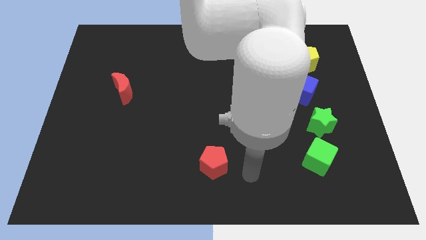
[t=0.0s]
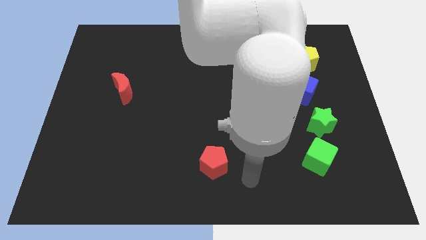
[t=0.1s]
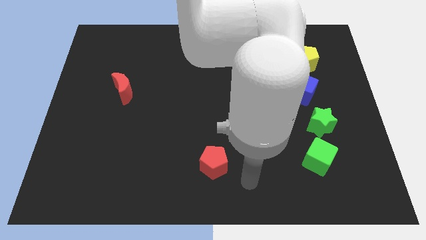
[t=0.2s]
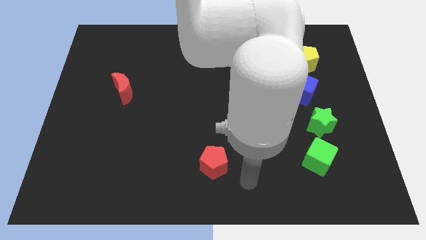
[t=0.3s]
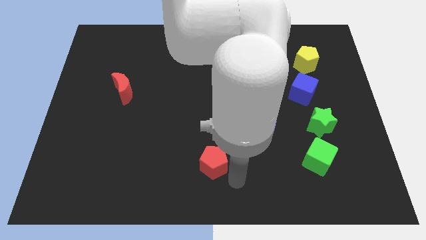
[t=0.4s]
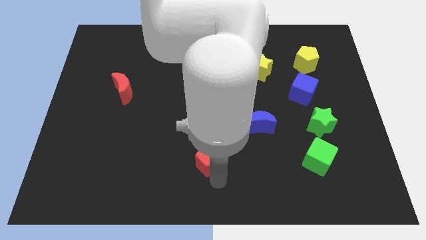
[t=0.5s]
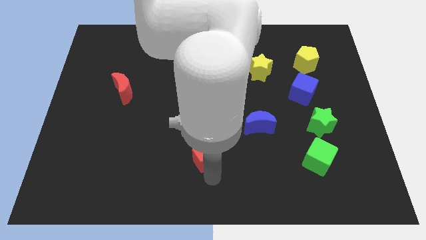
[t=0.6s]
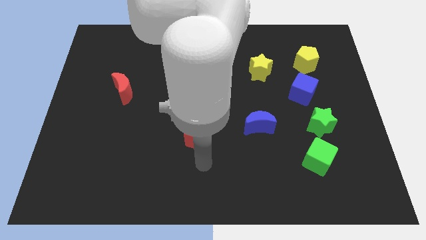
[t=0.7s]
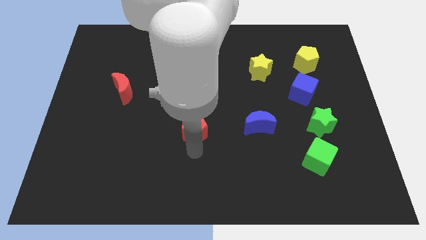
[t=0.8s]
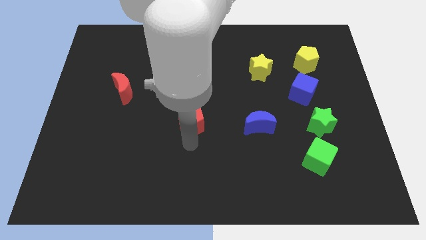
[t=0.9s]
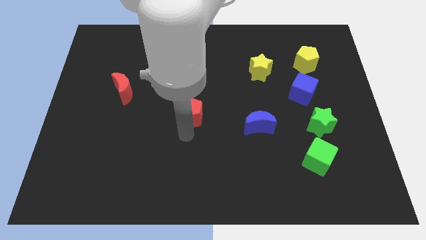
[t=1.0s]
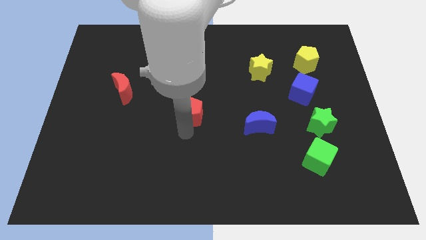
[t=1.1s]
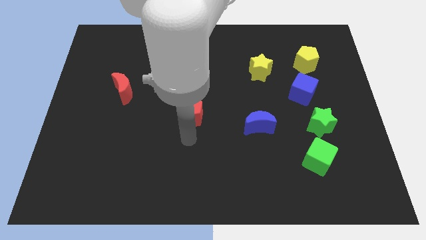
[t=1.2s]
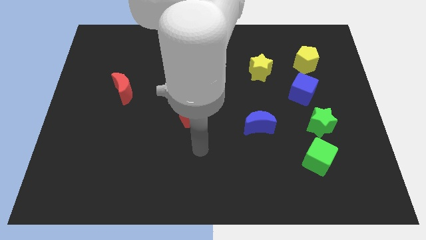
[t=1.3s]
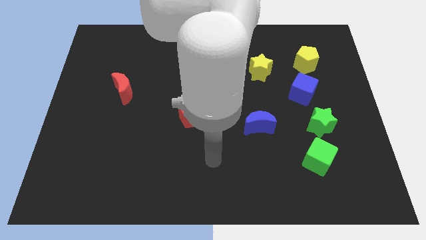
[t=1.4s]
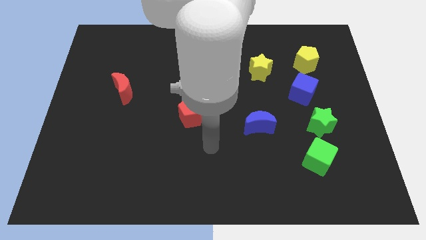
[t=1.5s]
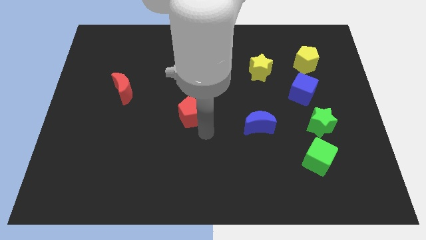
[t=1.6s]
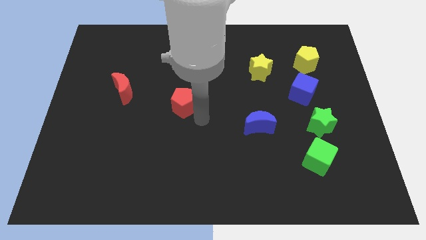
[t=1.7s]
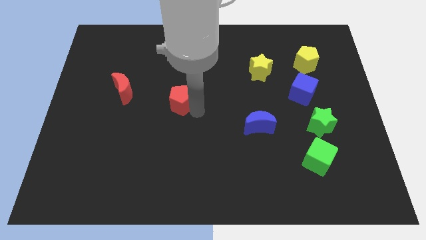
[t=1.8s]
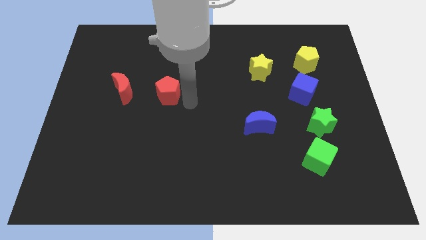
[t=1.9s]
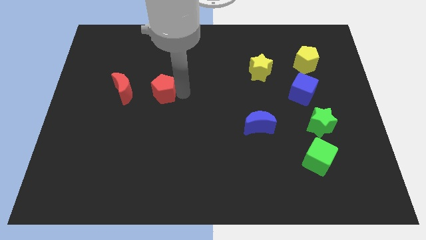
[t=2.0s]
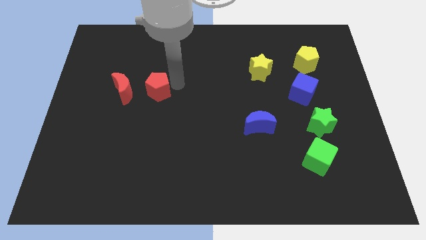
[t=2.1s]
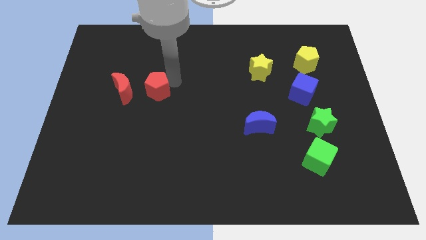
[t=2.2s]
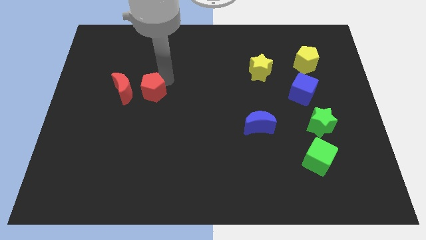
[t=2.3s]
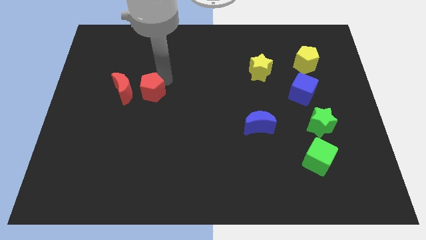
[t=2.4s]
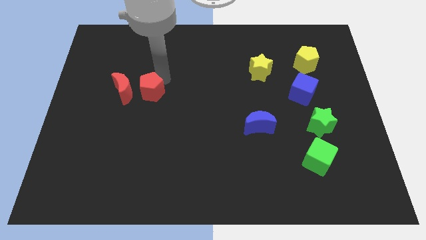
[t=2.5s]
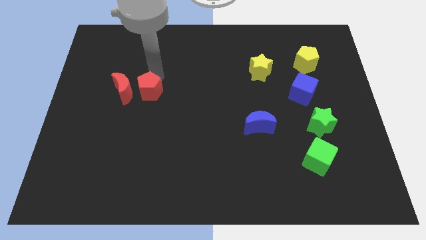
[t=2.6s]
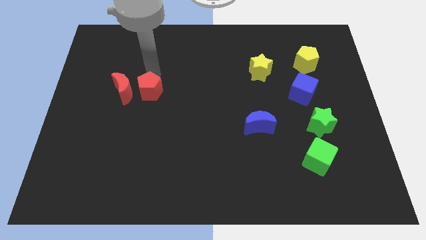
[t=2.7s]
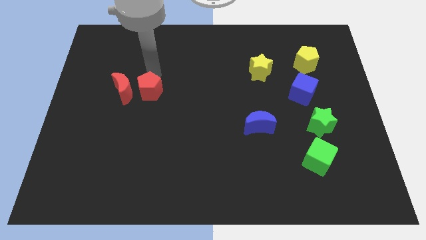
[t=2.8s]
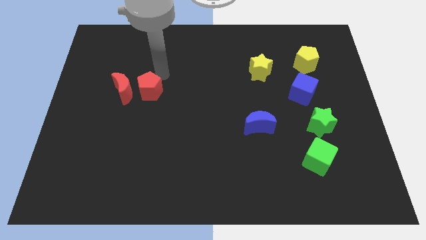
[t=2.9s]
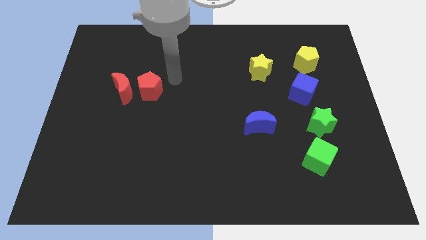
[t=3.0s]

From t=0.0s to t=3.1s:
push red pentagon into red moon

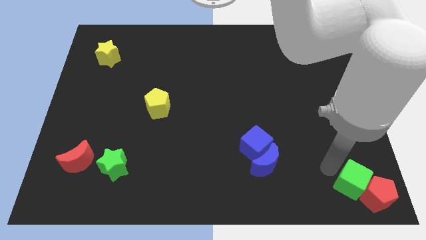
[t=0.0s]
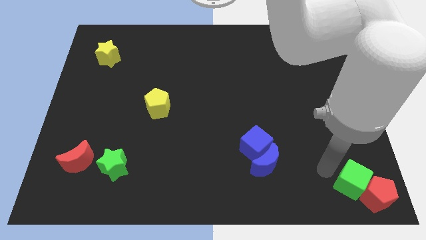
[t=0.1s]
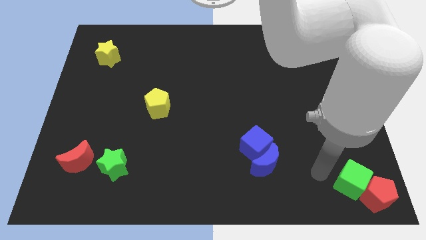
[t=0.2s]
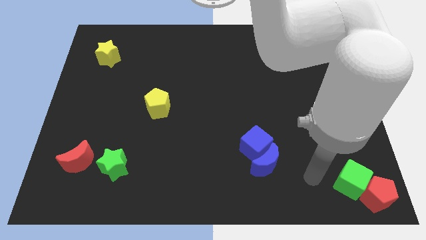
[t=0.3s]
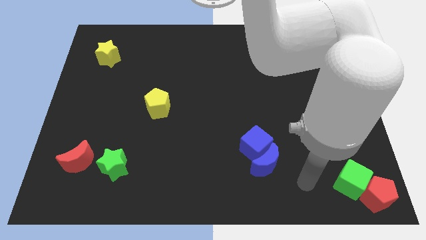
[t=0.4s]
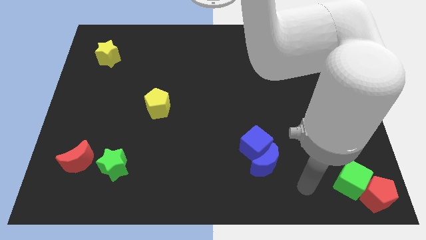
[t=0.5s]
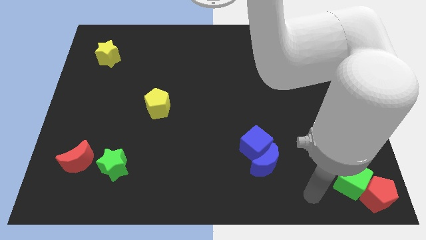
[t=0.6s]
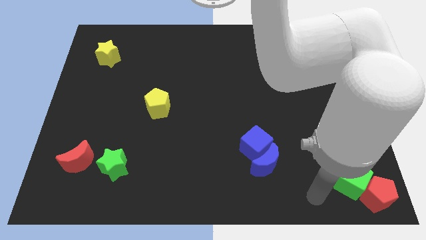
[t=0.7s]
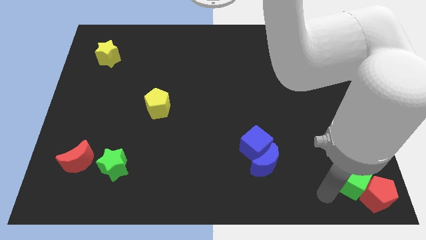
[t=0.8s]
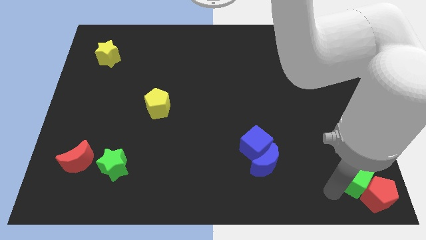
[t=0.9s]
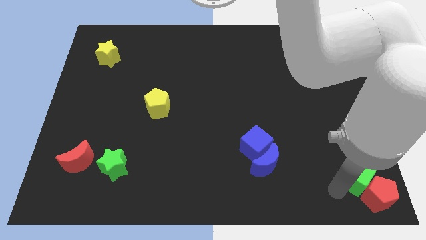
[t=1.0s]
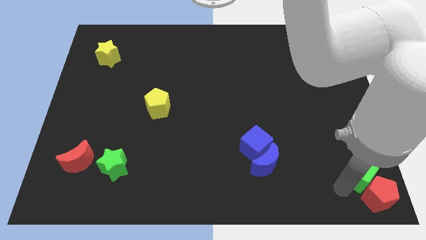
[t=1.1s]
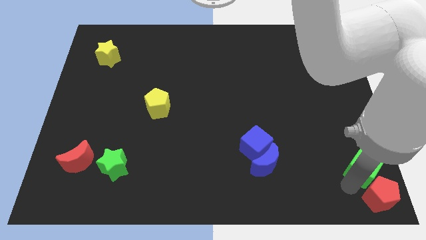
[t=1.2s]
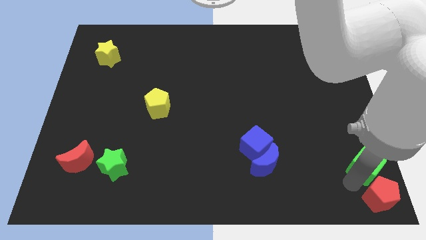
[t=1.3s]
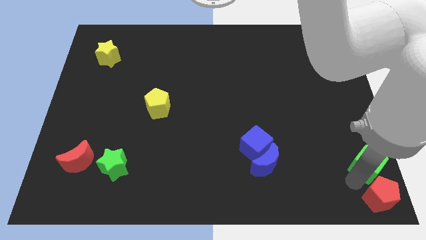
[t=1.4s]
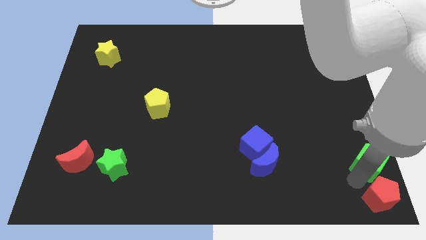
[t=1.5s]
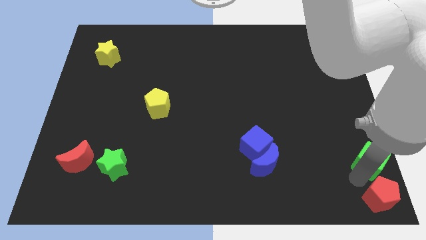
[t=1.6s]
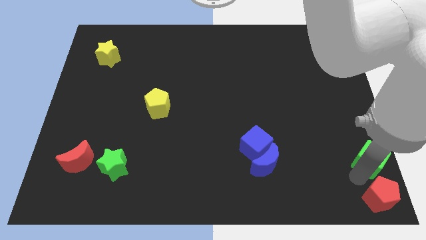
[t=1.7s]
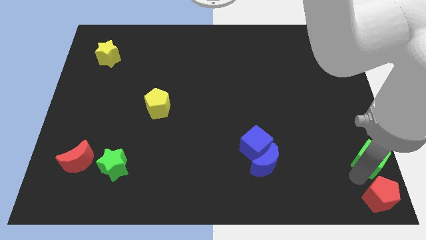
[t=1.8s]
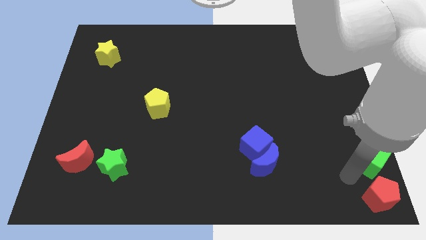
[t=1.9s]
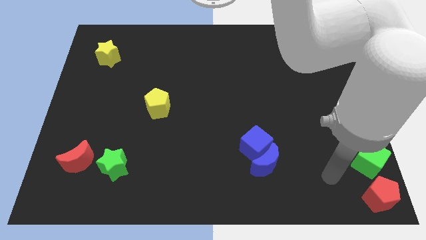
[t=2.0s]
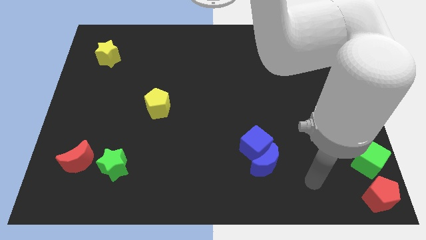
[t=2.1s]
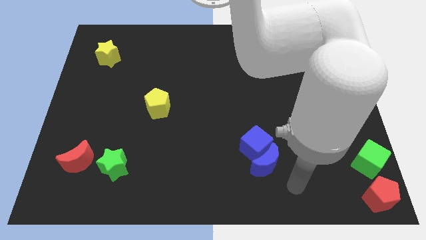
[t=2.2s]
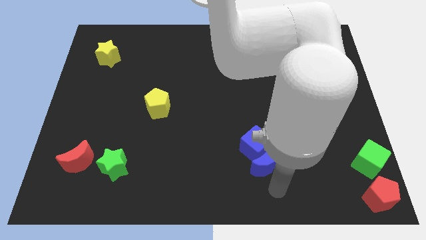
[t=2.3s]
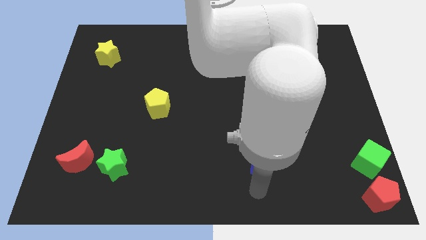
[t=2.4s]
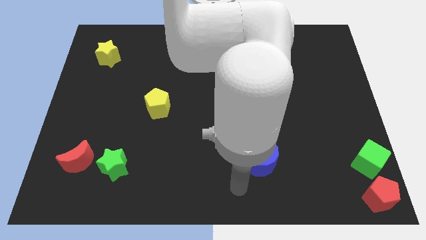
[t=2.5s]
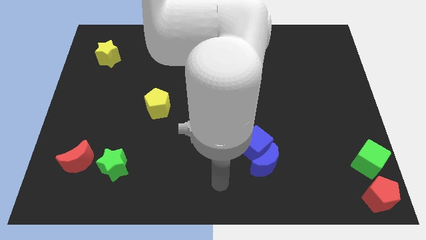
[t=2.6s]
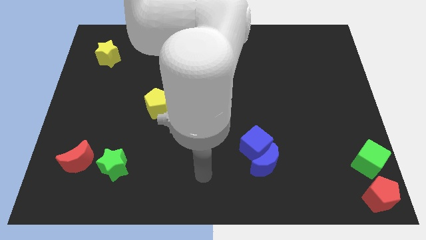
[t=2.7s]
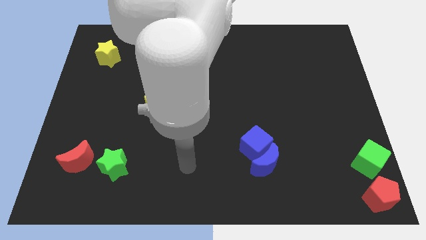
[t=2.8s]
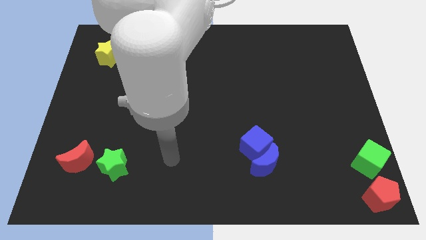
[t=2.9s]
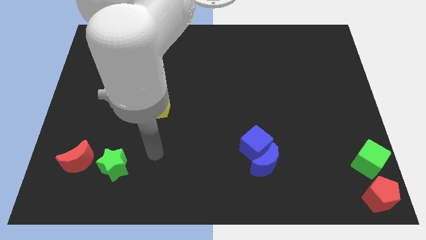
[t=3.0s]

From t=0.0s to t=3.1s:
push the green cube towards the top of the red pentagon

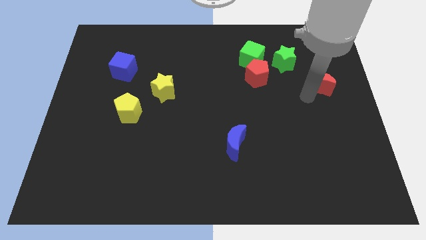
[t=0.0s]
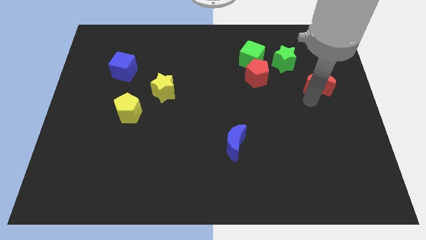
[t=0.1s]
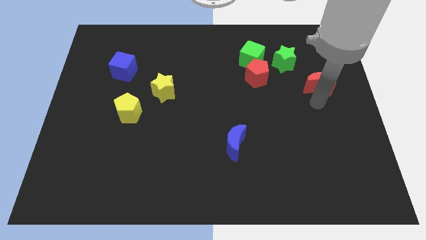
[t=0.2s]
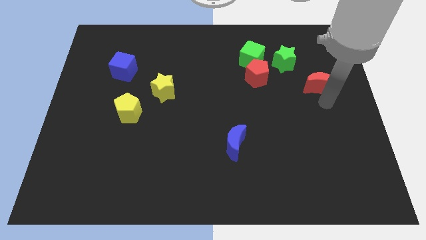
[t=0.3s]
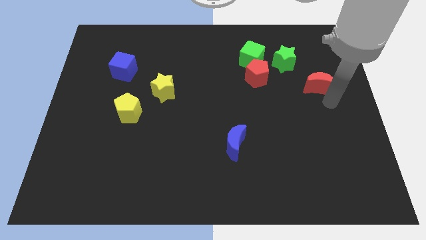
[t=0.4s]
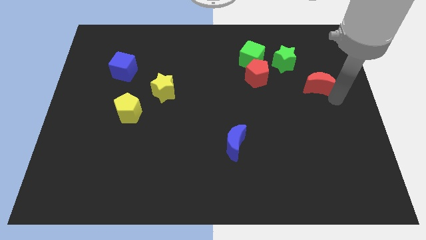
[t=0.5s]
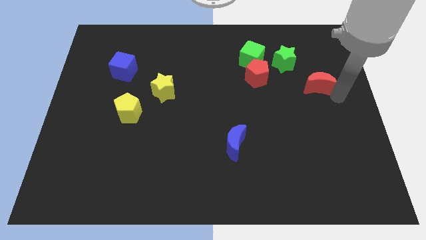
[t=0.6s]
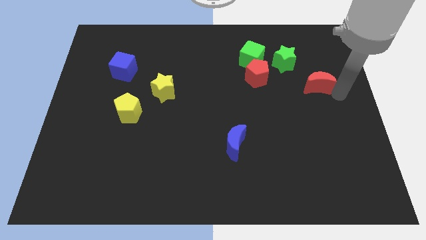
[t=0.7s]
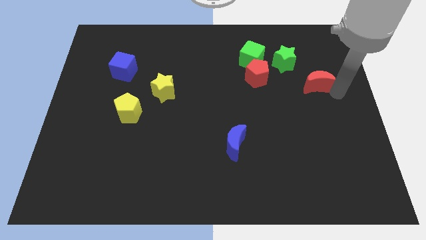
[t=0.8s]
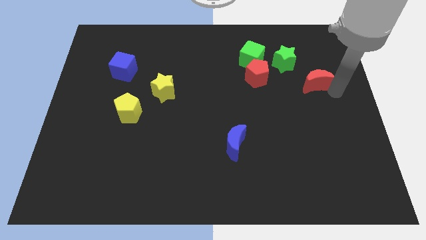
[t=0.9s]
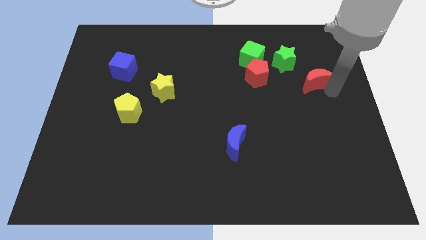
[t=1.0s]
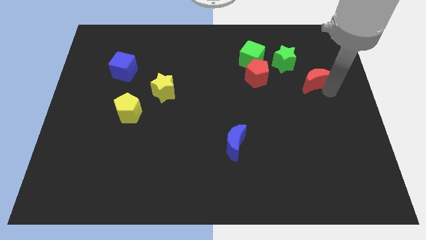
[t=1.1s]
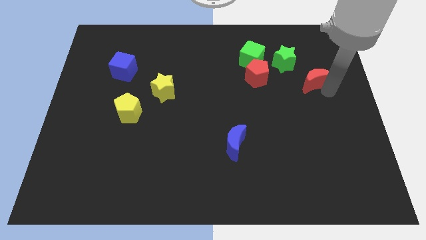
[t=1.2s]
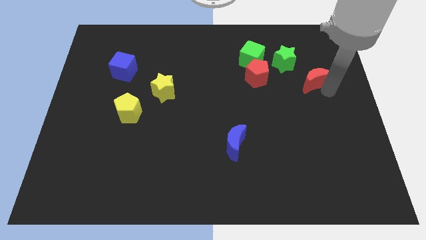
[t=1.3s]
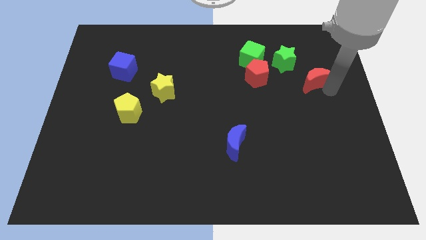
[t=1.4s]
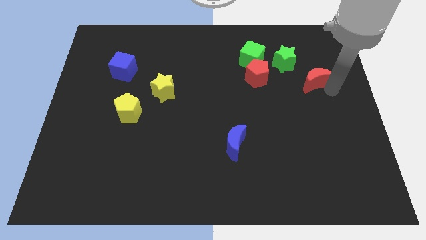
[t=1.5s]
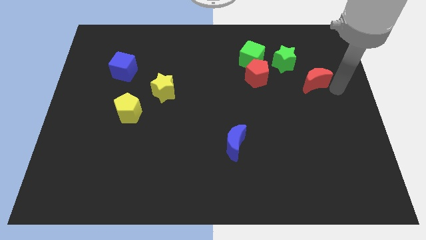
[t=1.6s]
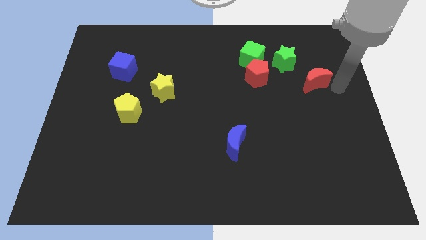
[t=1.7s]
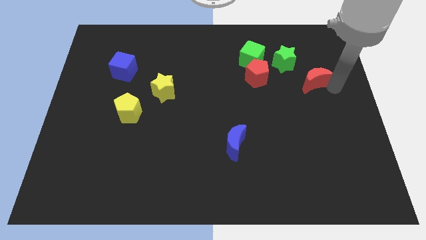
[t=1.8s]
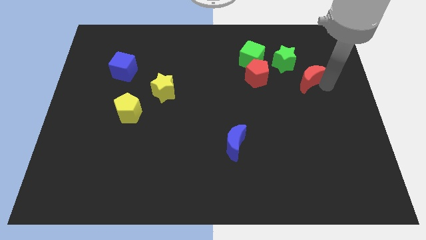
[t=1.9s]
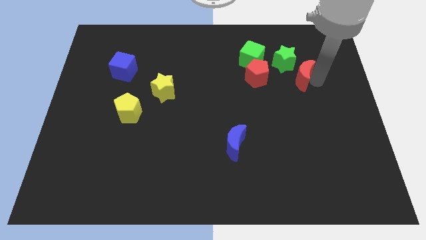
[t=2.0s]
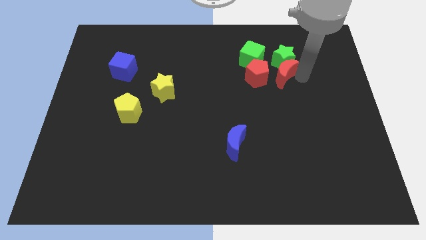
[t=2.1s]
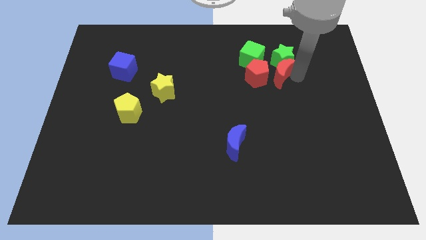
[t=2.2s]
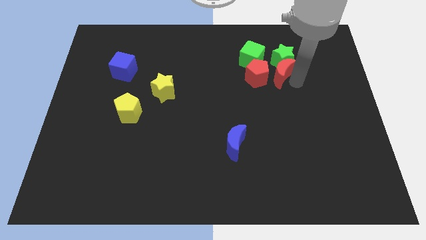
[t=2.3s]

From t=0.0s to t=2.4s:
push the red moon into the green star

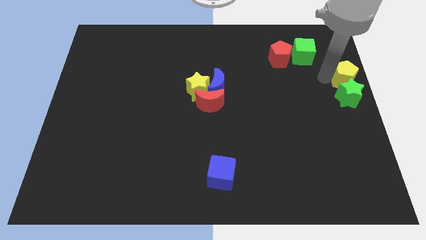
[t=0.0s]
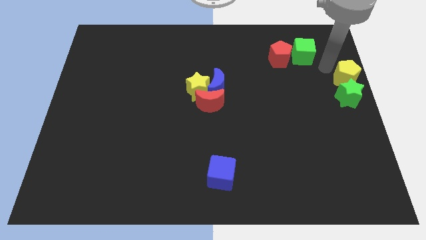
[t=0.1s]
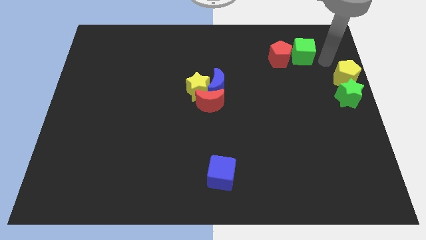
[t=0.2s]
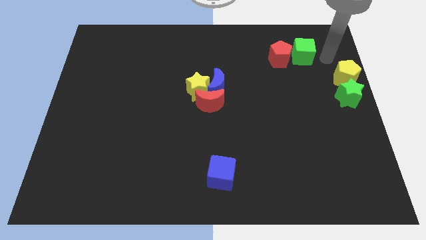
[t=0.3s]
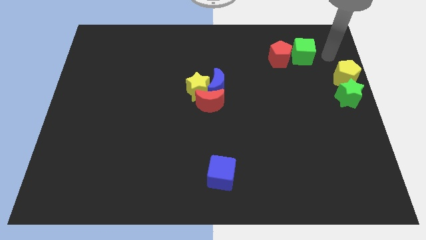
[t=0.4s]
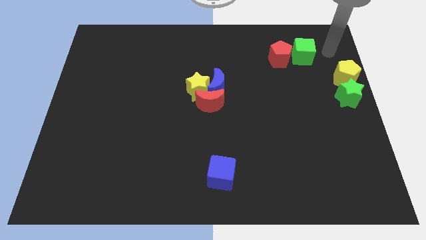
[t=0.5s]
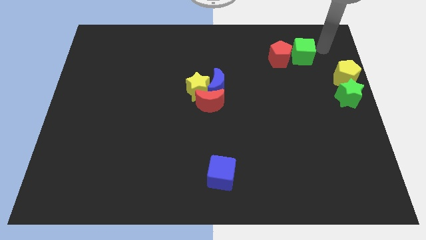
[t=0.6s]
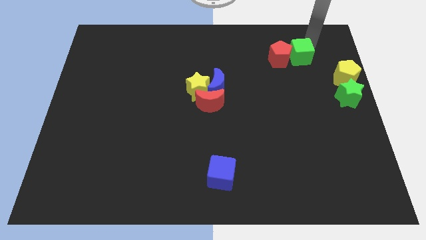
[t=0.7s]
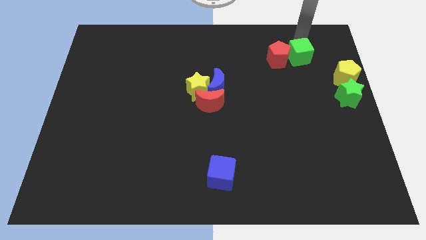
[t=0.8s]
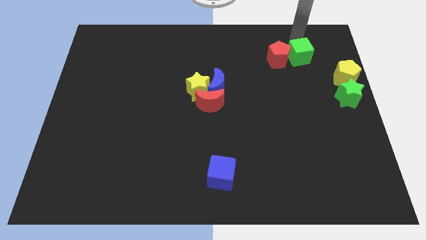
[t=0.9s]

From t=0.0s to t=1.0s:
move your arm away from the yellow pentagon
